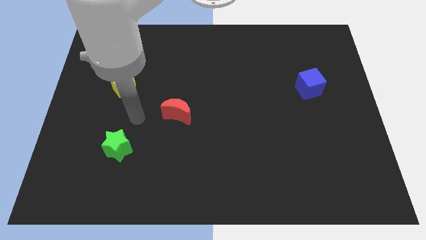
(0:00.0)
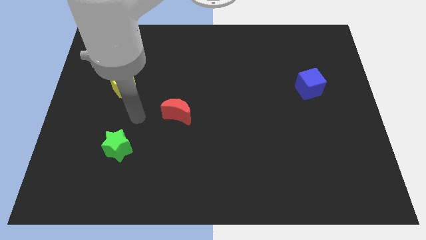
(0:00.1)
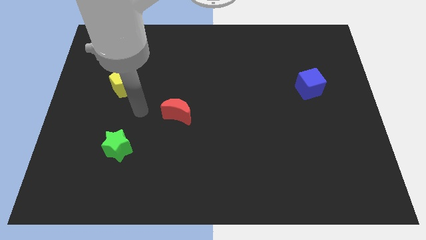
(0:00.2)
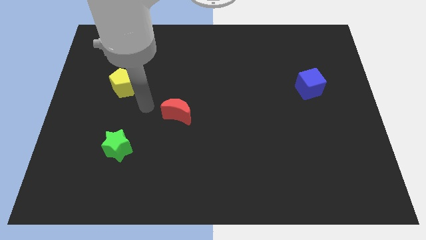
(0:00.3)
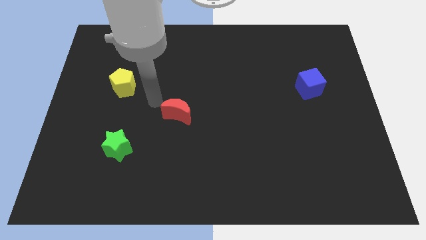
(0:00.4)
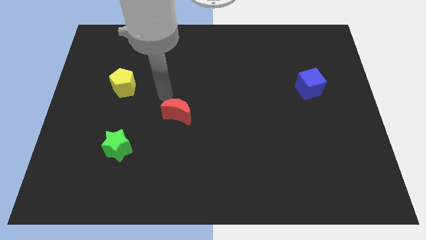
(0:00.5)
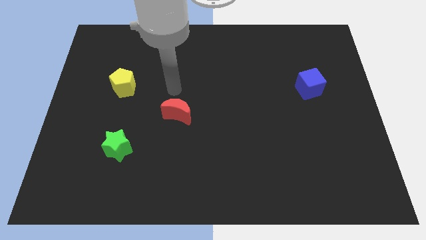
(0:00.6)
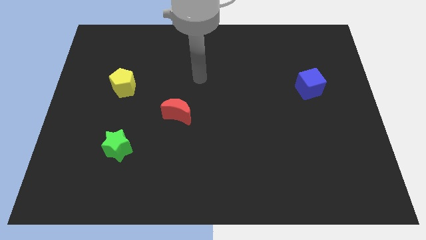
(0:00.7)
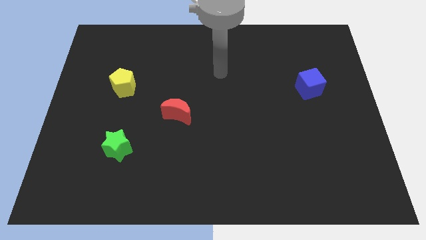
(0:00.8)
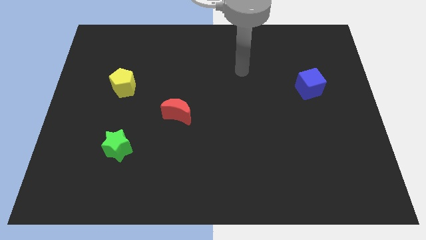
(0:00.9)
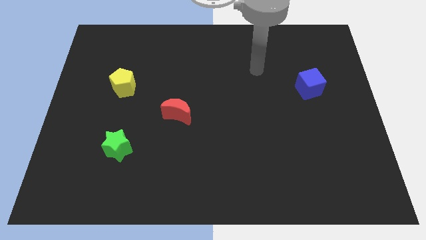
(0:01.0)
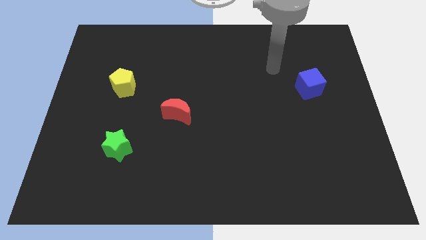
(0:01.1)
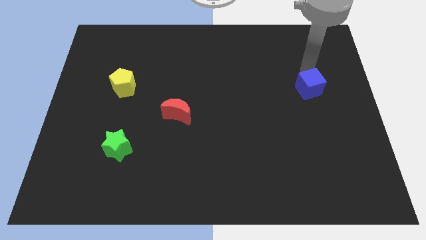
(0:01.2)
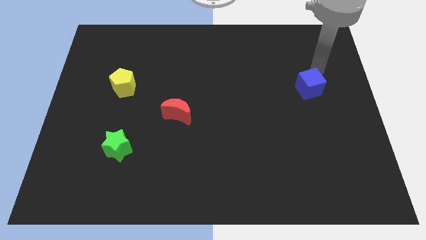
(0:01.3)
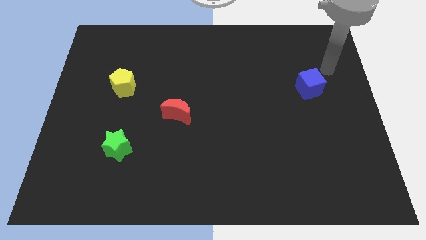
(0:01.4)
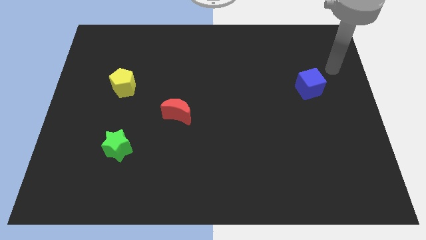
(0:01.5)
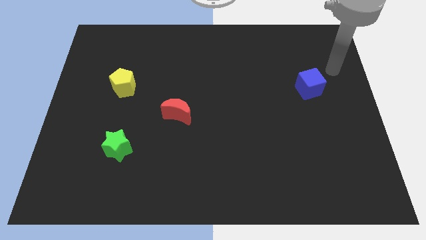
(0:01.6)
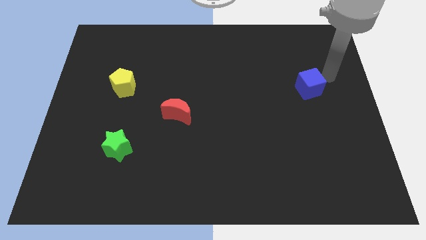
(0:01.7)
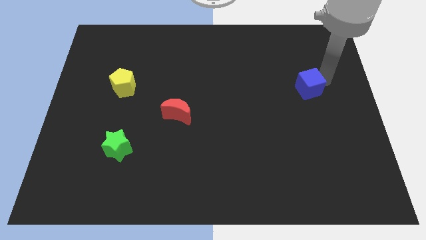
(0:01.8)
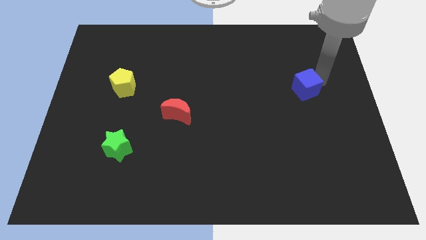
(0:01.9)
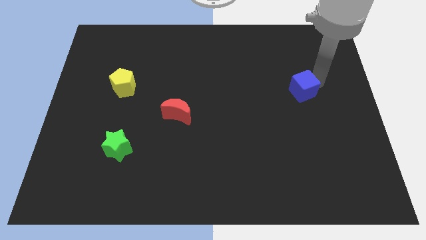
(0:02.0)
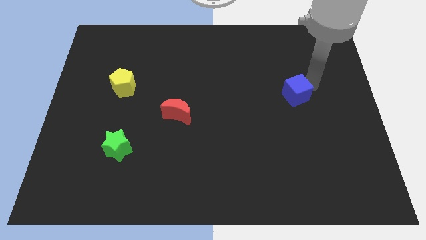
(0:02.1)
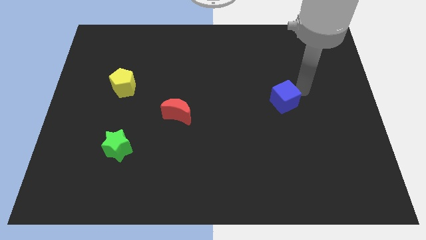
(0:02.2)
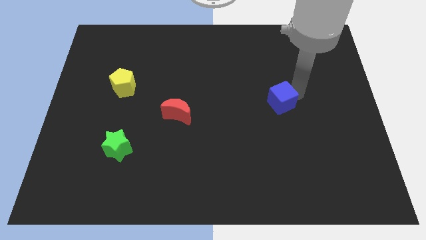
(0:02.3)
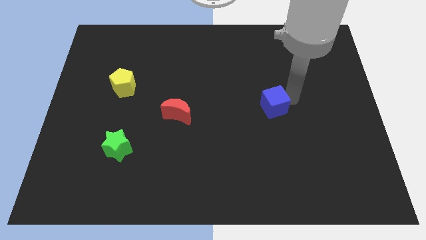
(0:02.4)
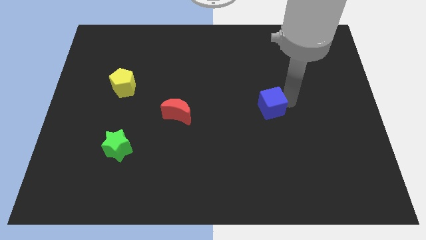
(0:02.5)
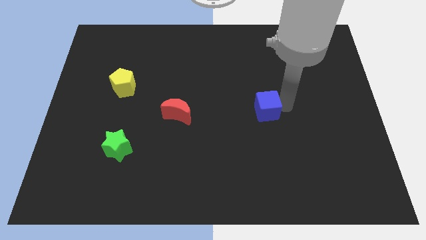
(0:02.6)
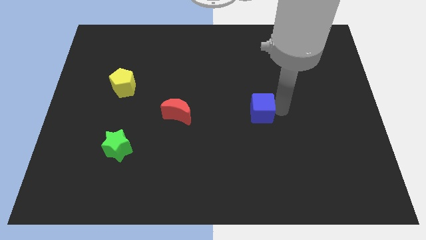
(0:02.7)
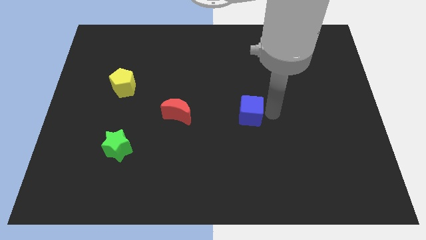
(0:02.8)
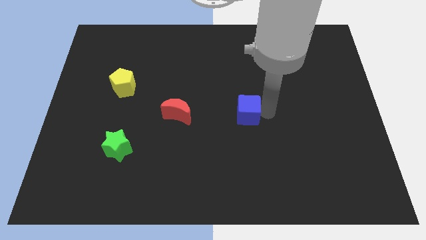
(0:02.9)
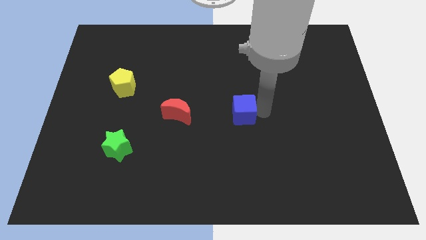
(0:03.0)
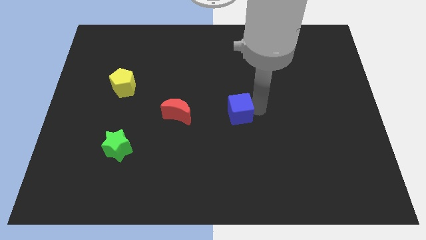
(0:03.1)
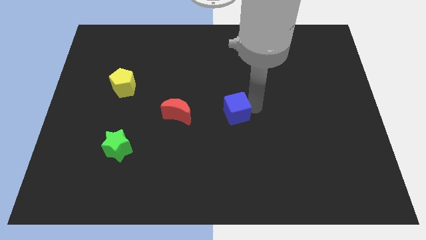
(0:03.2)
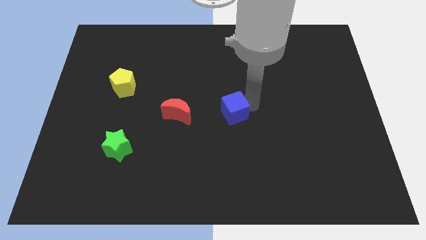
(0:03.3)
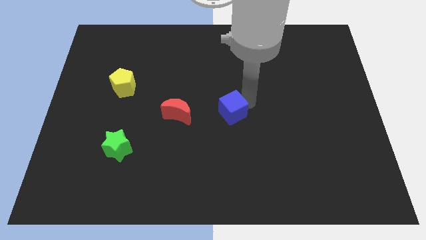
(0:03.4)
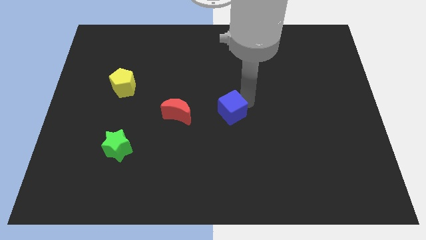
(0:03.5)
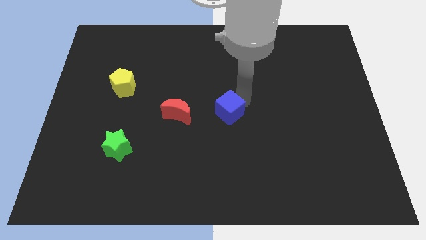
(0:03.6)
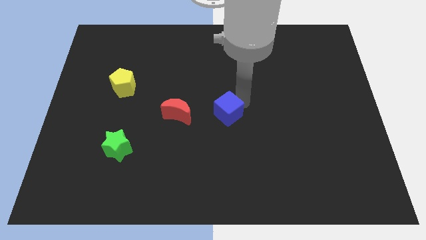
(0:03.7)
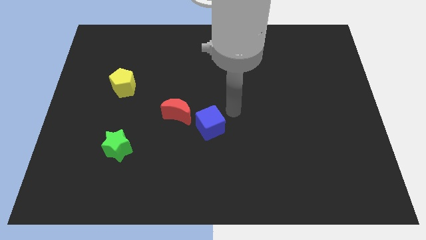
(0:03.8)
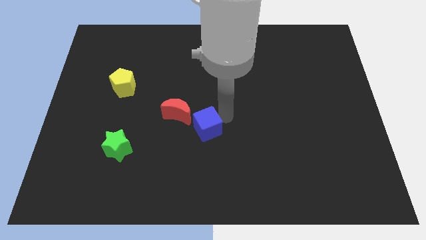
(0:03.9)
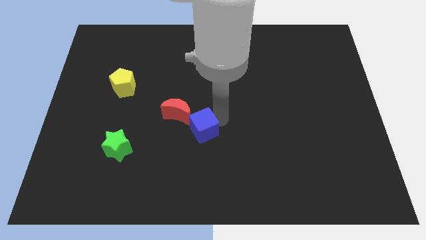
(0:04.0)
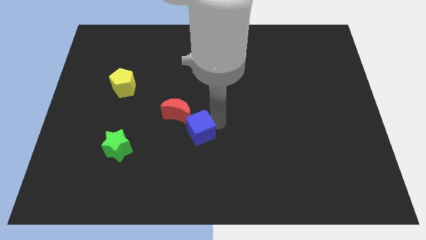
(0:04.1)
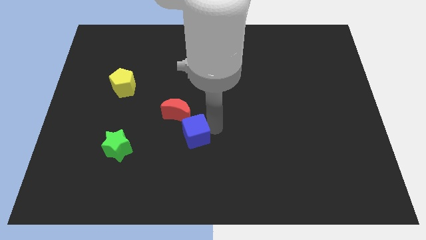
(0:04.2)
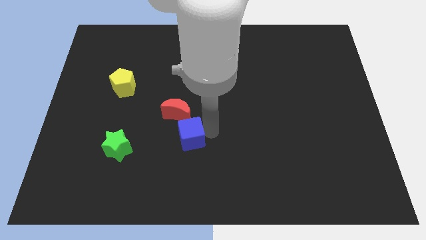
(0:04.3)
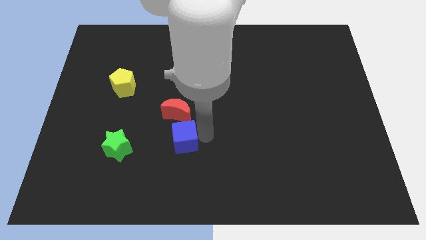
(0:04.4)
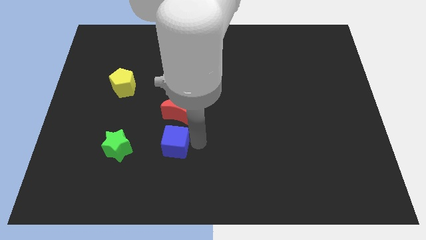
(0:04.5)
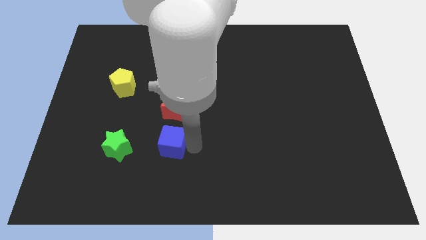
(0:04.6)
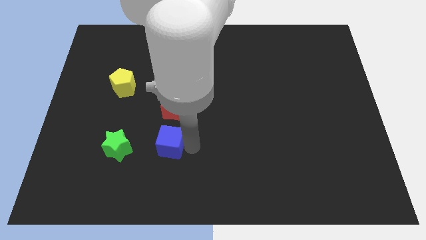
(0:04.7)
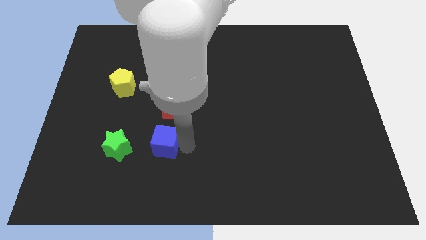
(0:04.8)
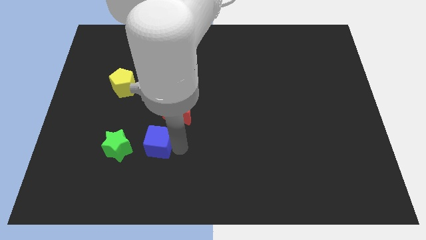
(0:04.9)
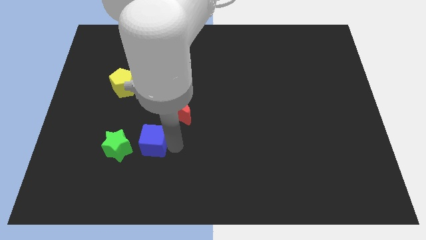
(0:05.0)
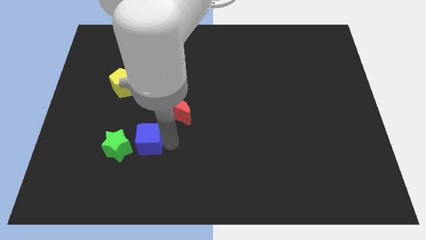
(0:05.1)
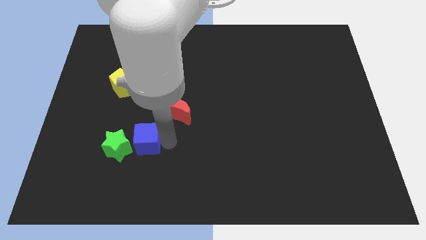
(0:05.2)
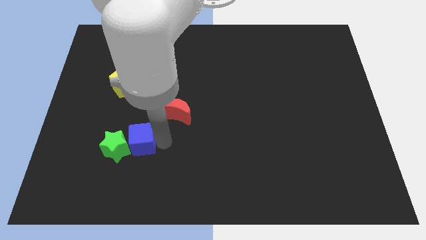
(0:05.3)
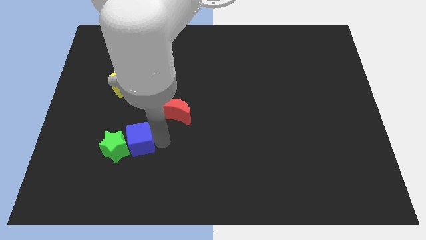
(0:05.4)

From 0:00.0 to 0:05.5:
put the blue cube towards the green star

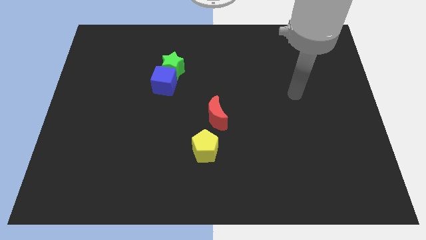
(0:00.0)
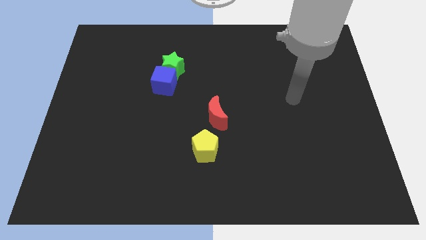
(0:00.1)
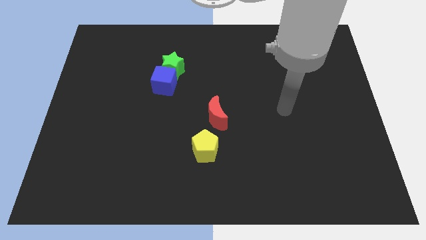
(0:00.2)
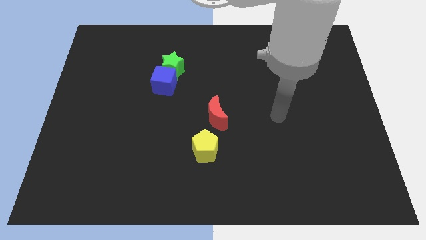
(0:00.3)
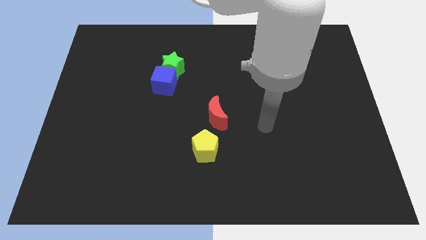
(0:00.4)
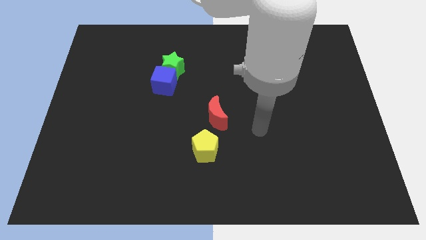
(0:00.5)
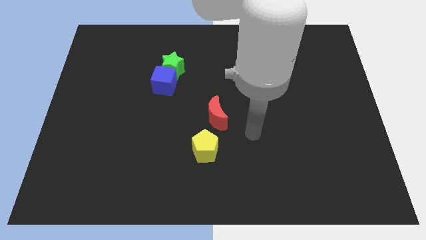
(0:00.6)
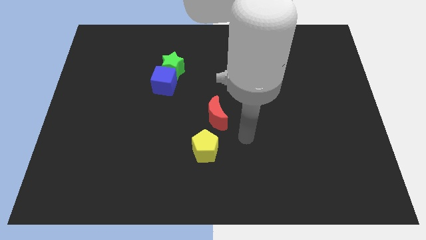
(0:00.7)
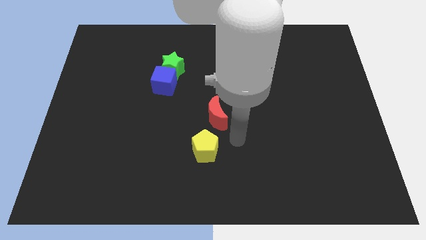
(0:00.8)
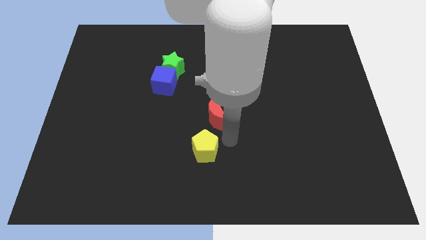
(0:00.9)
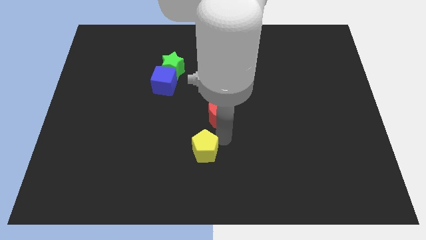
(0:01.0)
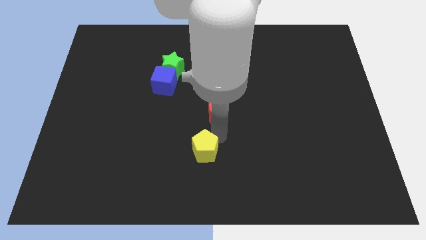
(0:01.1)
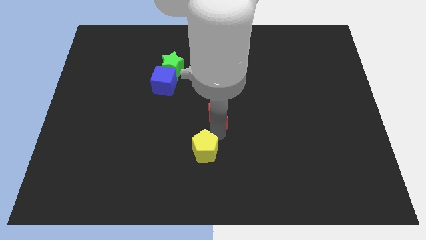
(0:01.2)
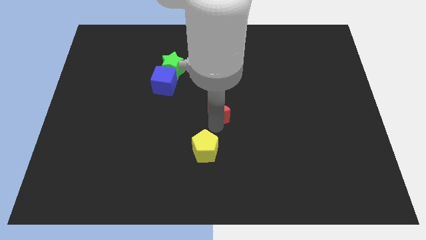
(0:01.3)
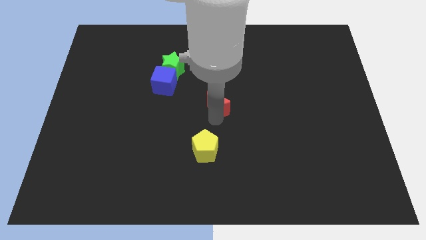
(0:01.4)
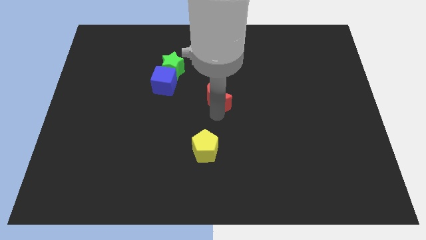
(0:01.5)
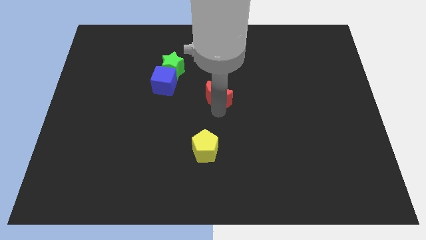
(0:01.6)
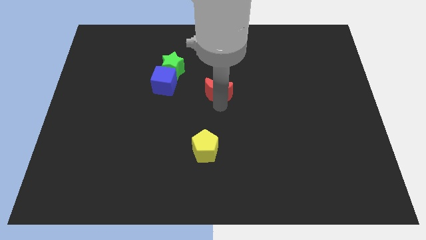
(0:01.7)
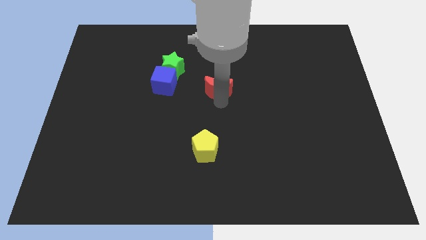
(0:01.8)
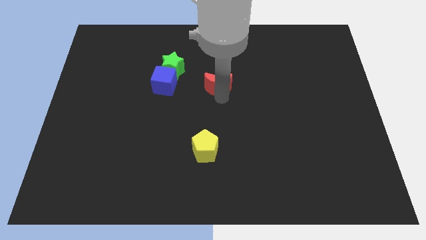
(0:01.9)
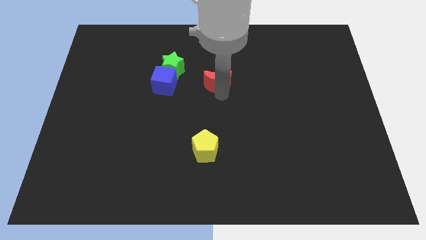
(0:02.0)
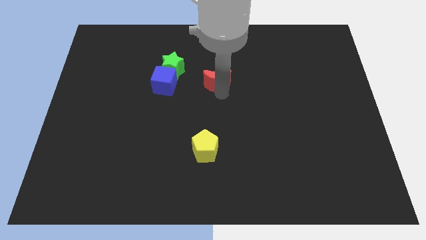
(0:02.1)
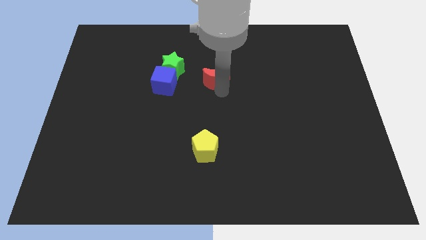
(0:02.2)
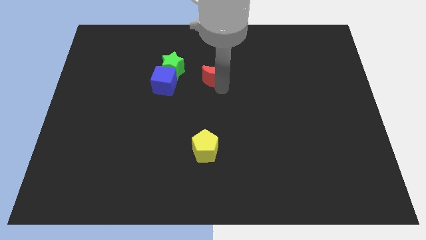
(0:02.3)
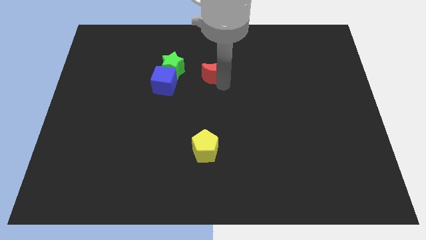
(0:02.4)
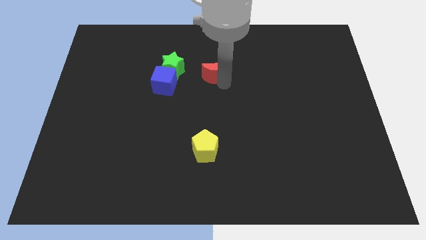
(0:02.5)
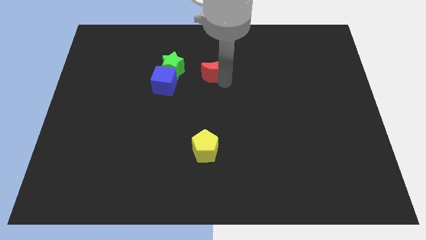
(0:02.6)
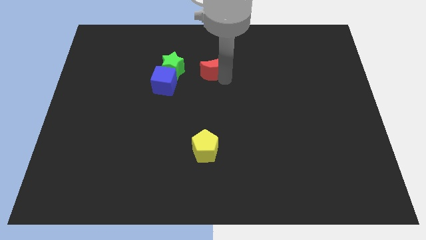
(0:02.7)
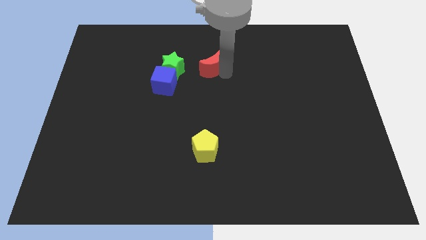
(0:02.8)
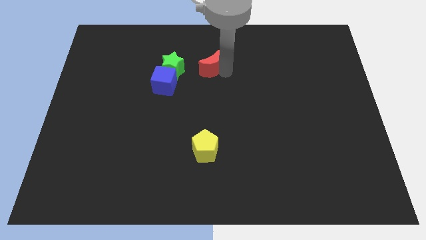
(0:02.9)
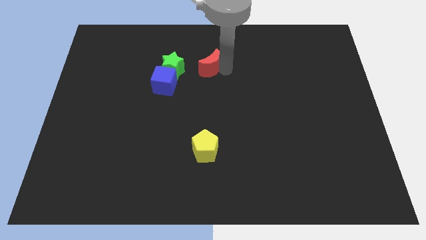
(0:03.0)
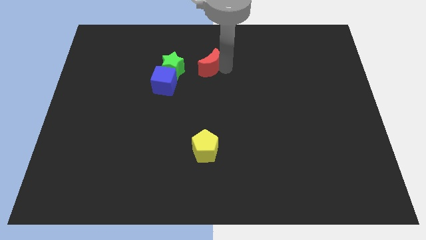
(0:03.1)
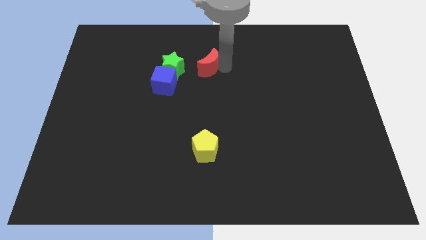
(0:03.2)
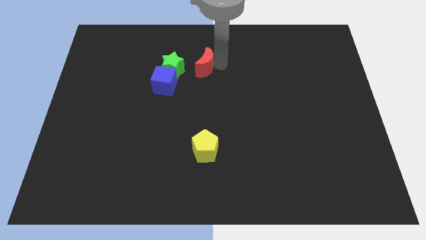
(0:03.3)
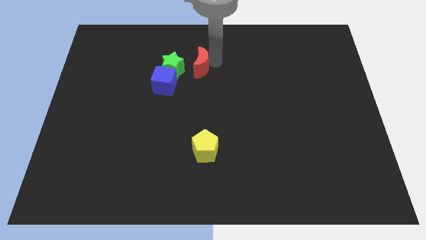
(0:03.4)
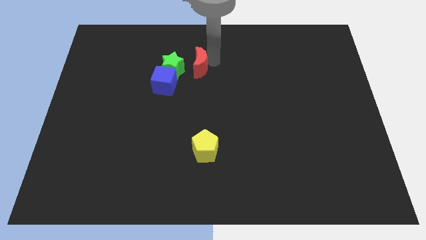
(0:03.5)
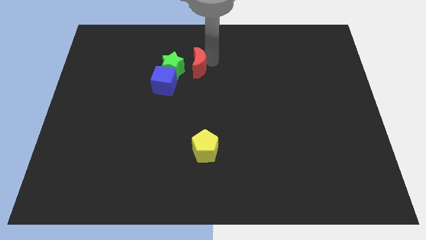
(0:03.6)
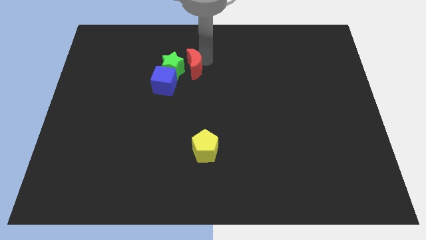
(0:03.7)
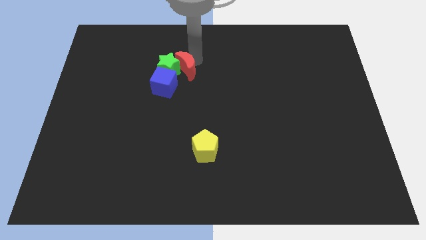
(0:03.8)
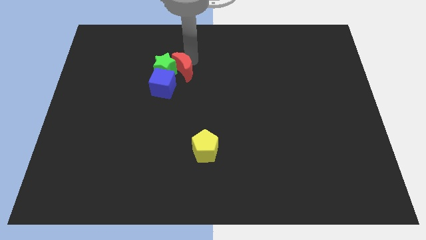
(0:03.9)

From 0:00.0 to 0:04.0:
move the moon close to the green block
